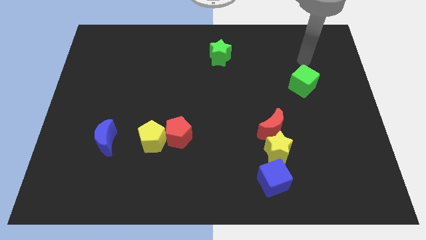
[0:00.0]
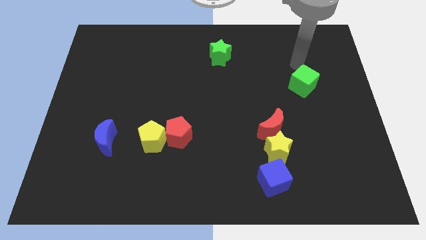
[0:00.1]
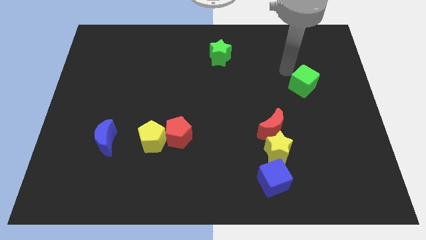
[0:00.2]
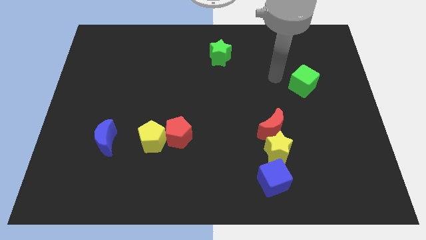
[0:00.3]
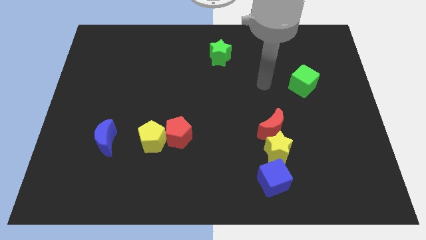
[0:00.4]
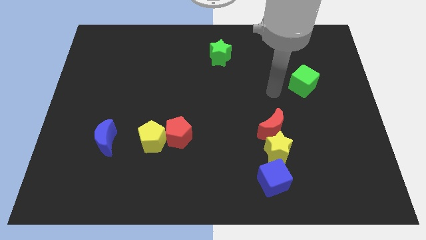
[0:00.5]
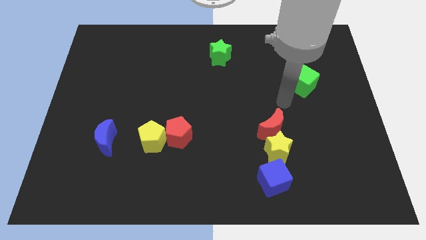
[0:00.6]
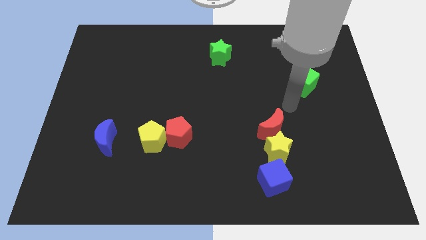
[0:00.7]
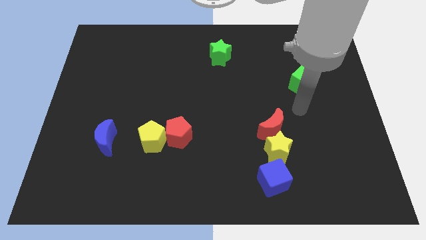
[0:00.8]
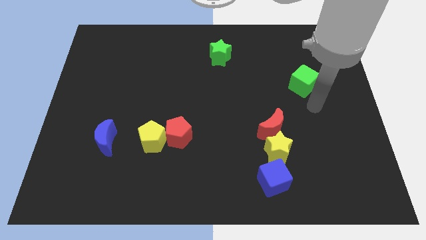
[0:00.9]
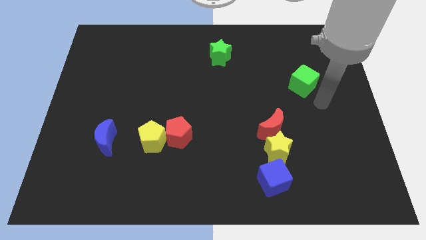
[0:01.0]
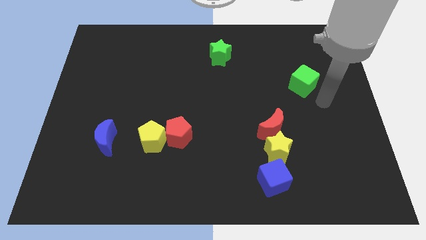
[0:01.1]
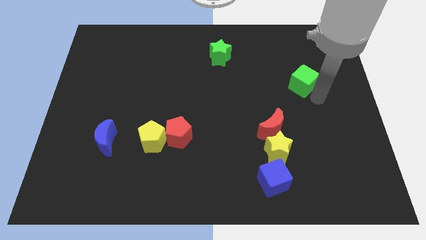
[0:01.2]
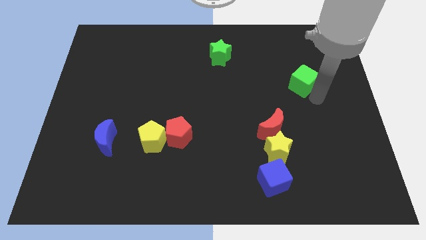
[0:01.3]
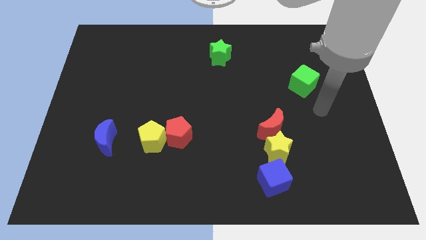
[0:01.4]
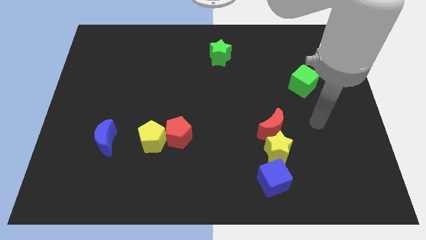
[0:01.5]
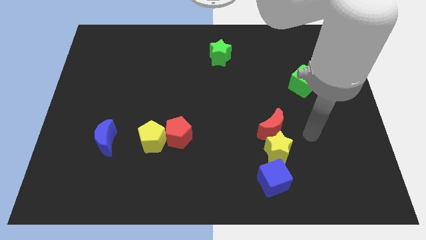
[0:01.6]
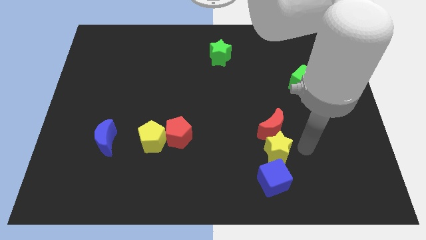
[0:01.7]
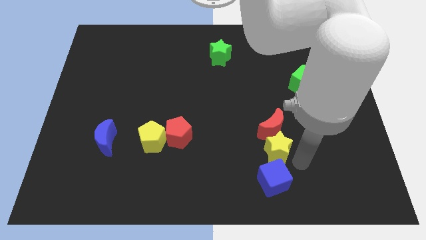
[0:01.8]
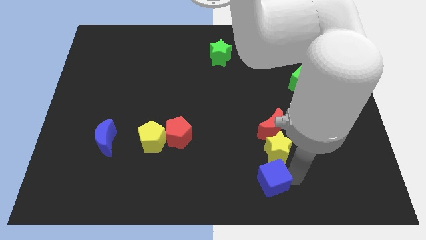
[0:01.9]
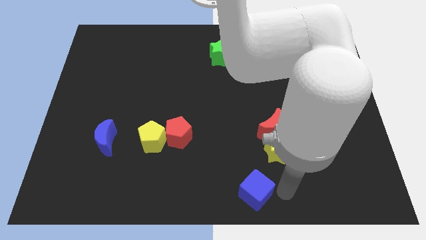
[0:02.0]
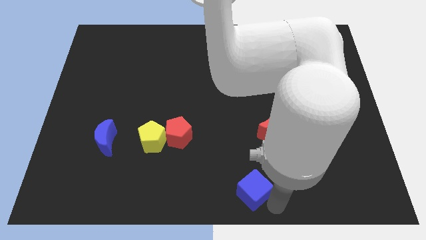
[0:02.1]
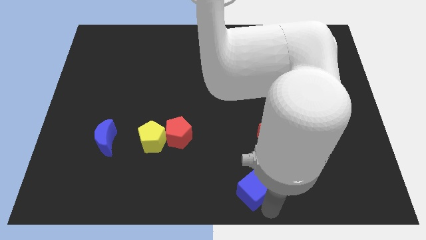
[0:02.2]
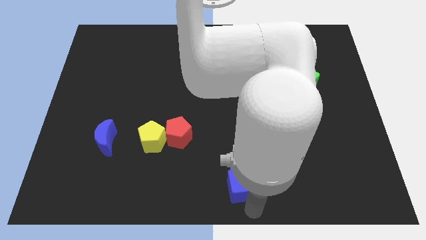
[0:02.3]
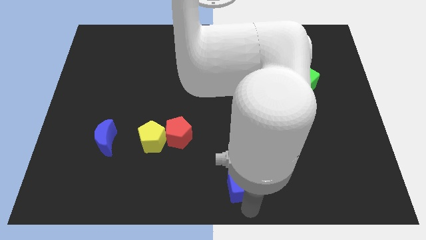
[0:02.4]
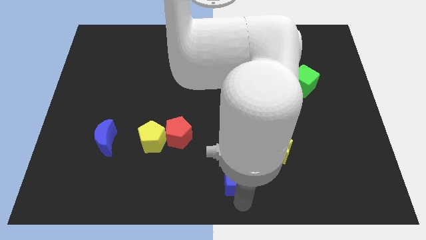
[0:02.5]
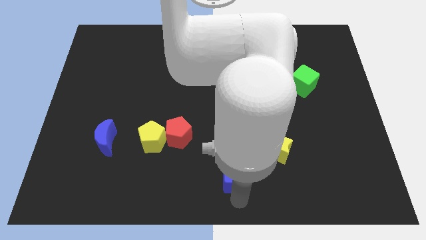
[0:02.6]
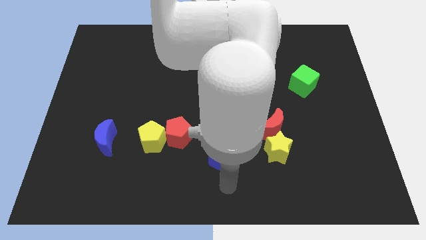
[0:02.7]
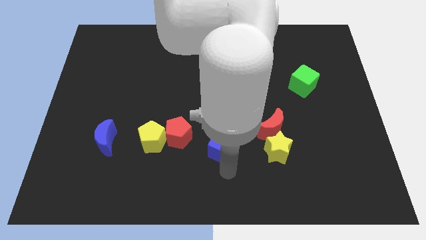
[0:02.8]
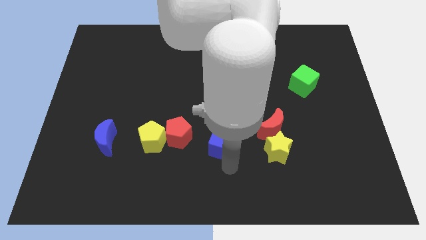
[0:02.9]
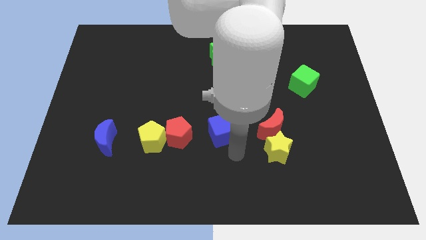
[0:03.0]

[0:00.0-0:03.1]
push blue cube upwards

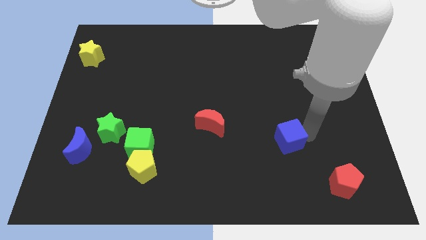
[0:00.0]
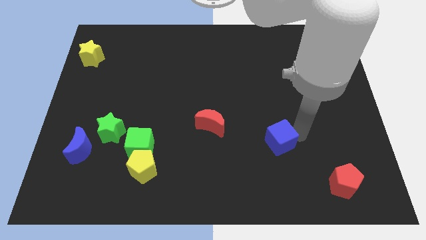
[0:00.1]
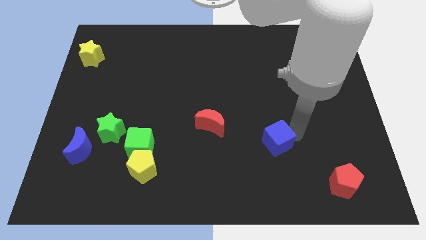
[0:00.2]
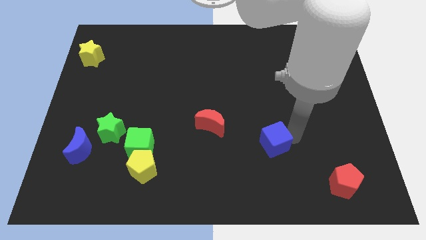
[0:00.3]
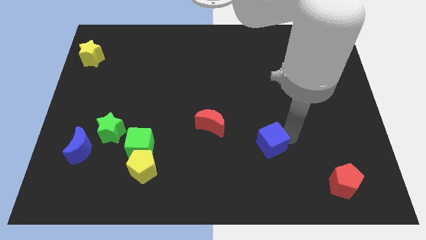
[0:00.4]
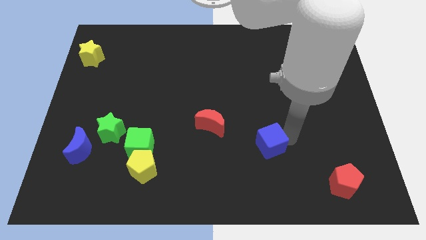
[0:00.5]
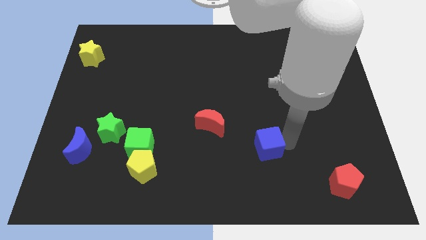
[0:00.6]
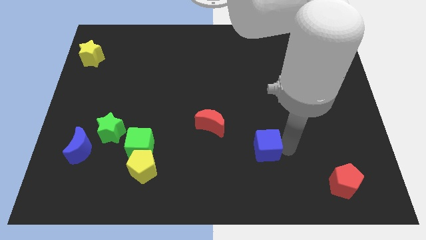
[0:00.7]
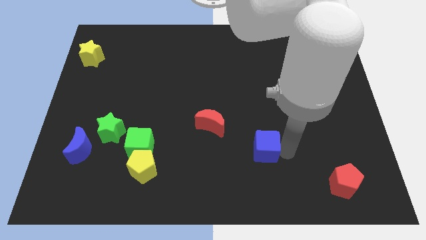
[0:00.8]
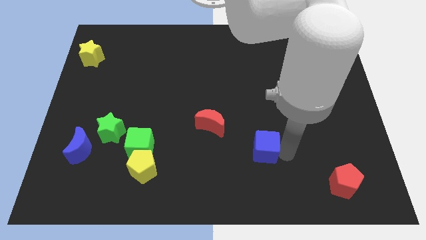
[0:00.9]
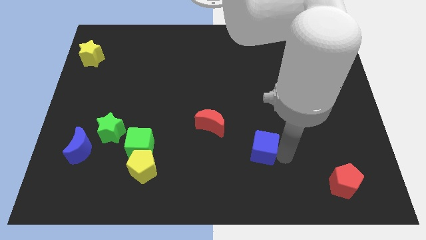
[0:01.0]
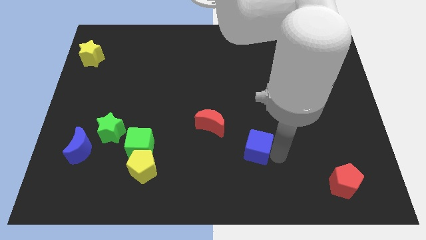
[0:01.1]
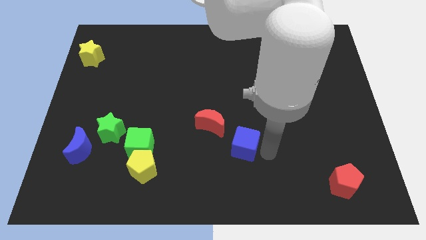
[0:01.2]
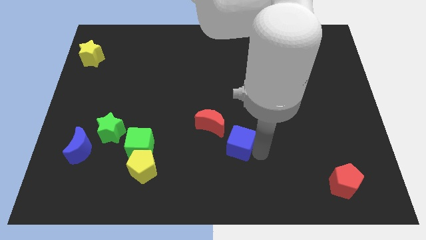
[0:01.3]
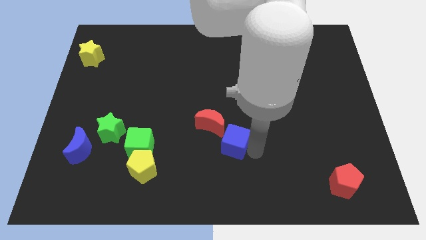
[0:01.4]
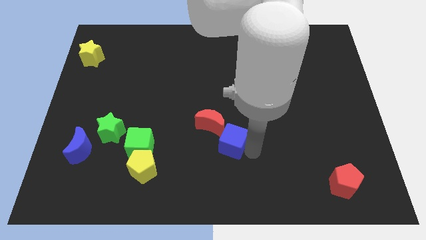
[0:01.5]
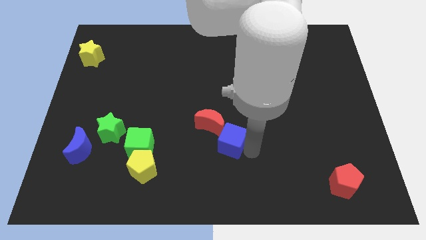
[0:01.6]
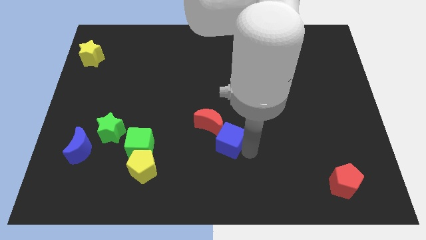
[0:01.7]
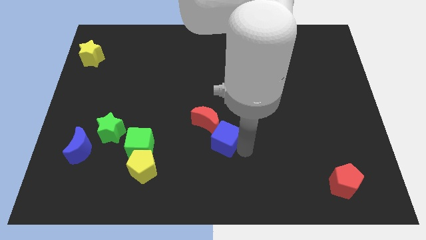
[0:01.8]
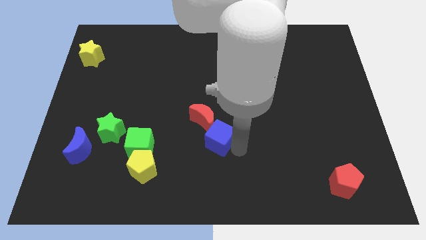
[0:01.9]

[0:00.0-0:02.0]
move the blue cube into the red crescent

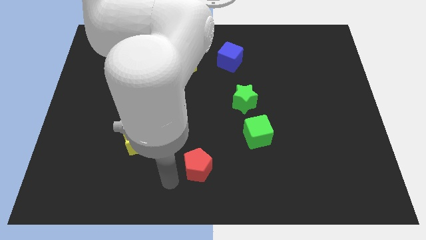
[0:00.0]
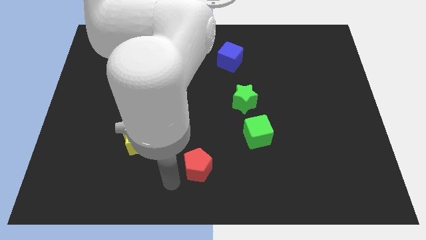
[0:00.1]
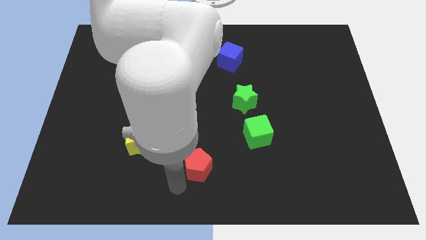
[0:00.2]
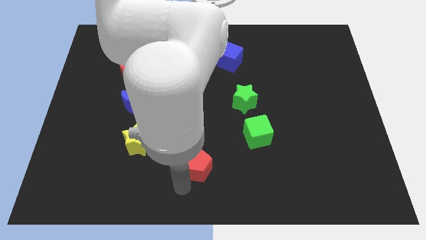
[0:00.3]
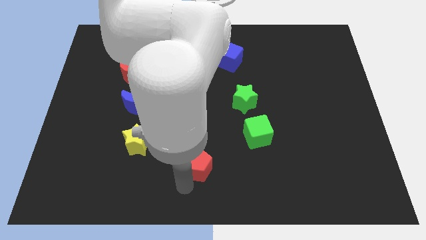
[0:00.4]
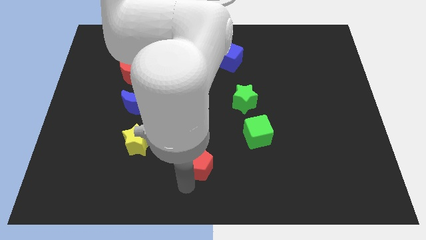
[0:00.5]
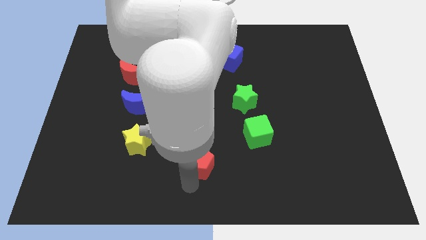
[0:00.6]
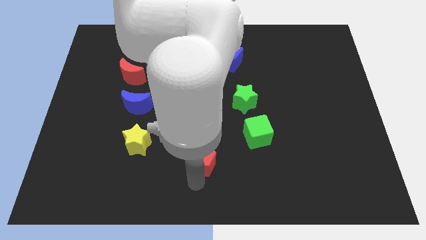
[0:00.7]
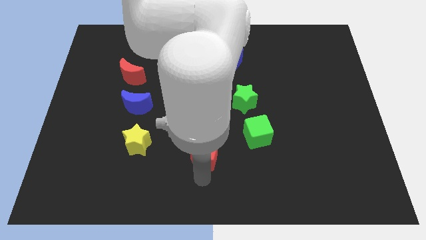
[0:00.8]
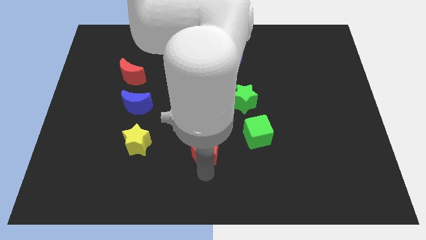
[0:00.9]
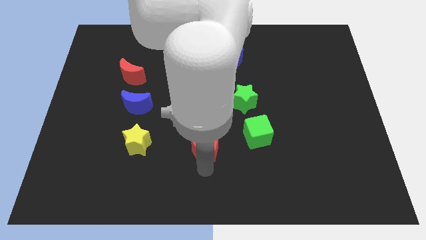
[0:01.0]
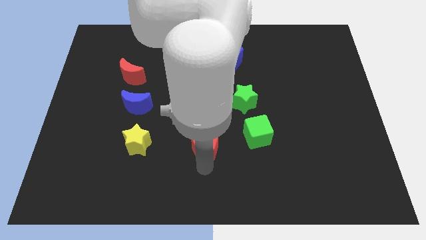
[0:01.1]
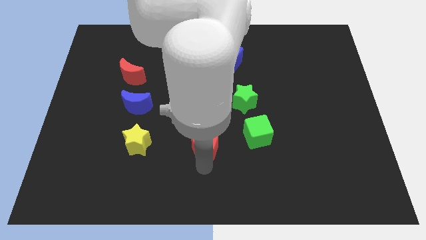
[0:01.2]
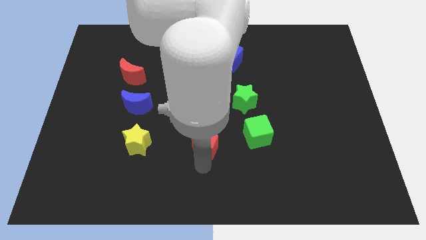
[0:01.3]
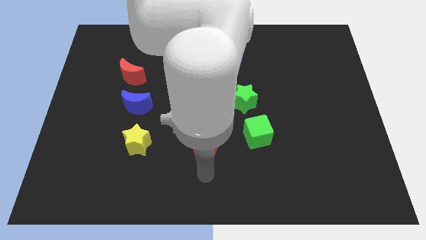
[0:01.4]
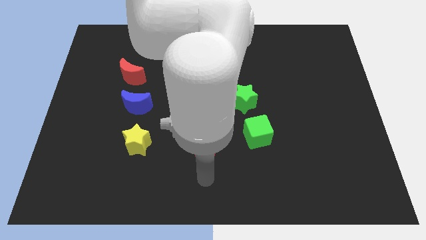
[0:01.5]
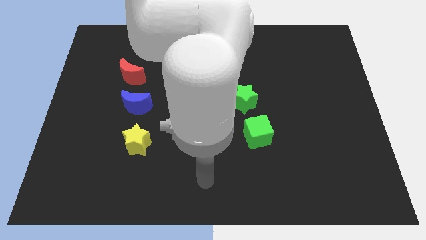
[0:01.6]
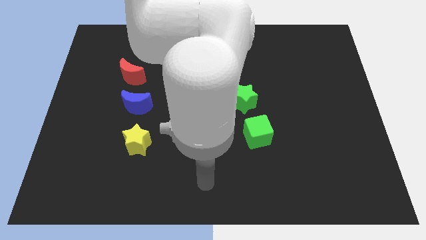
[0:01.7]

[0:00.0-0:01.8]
place the red pentagon horizontally in between green cube and yellow star

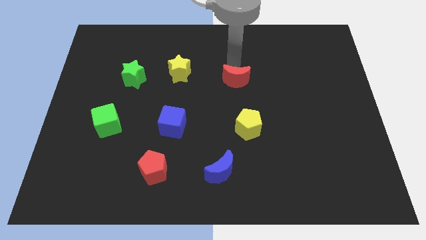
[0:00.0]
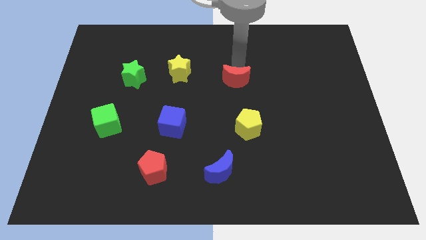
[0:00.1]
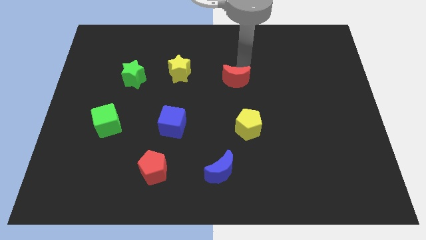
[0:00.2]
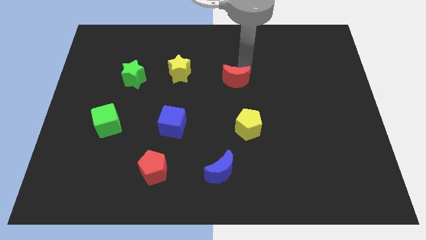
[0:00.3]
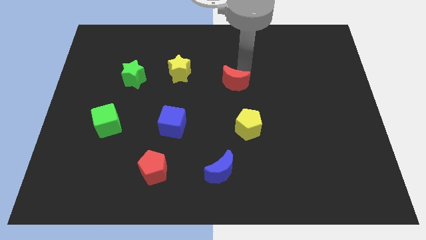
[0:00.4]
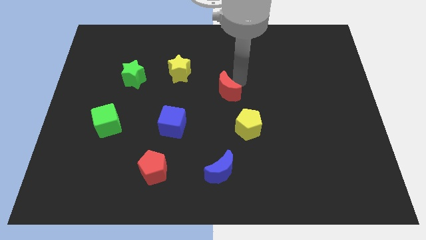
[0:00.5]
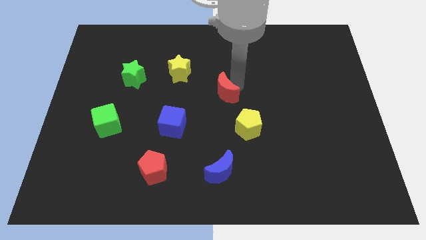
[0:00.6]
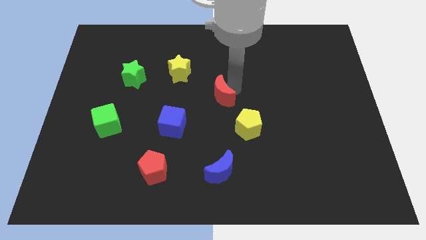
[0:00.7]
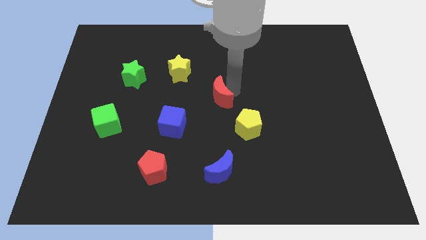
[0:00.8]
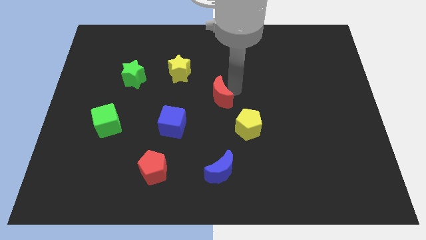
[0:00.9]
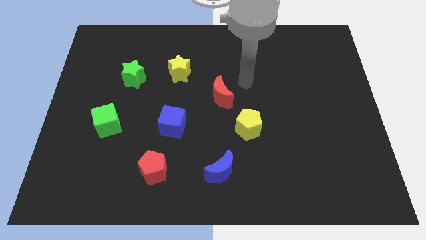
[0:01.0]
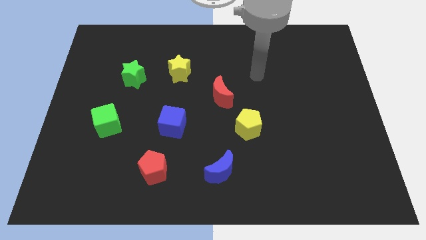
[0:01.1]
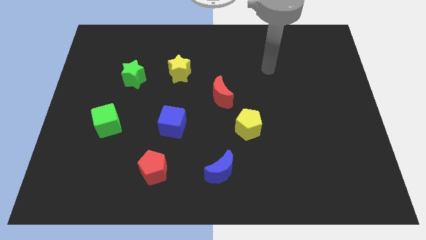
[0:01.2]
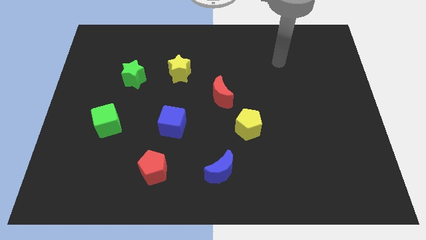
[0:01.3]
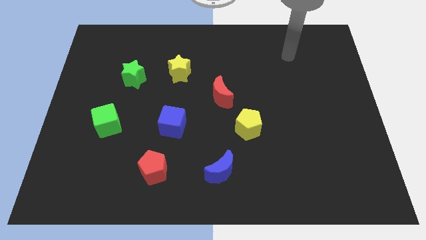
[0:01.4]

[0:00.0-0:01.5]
move the red moon to the top left of the yellow pentagon

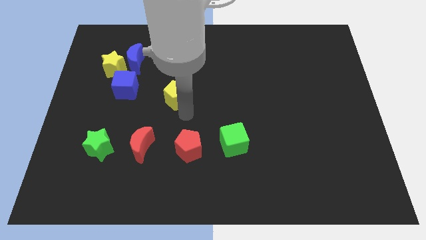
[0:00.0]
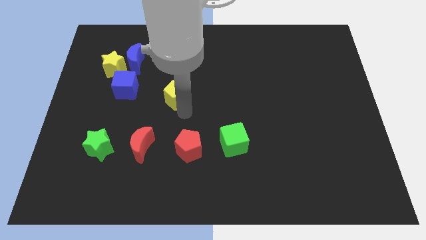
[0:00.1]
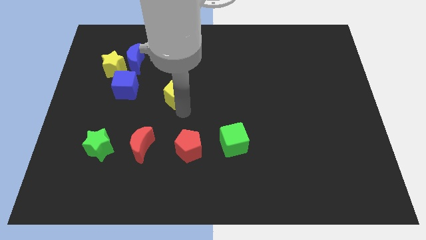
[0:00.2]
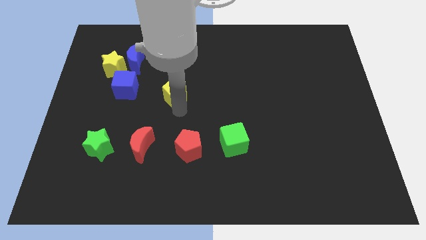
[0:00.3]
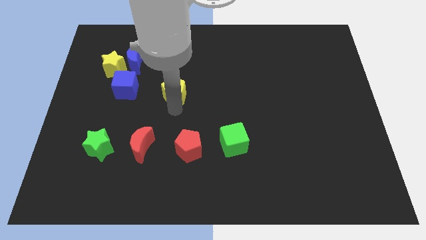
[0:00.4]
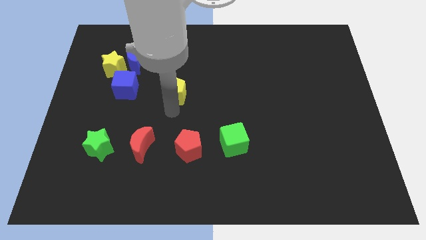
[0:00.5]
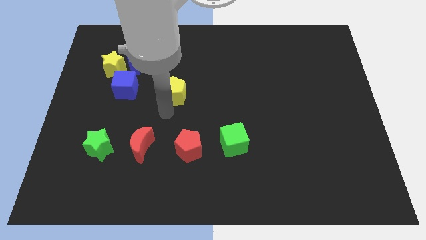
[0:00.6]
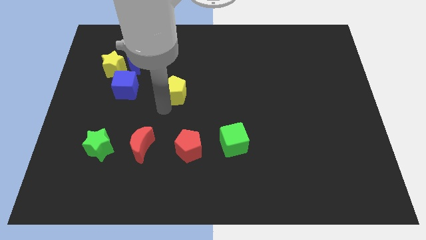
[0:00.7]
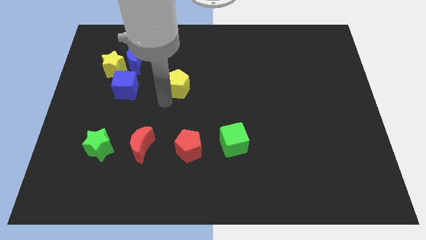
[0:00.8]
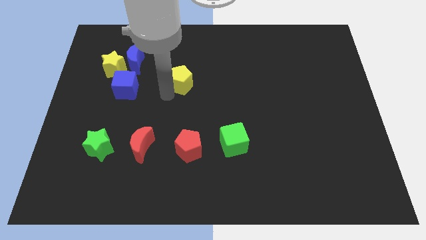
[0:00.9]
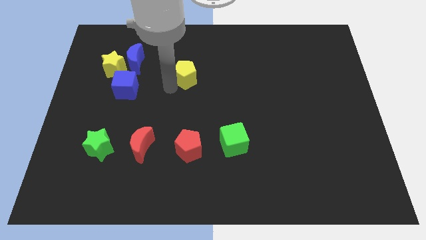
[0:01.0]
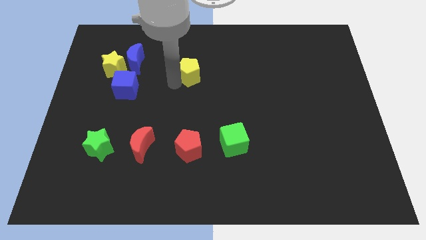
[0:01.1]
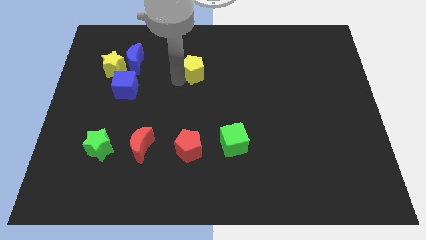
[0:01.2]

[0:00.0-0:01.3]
move the yellow pentagon vertically to the top side of the red pentagon
